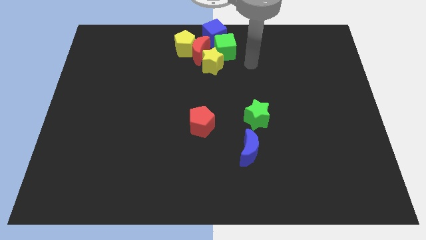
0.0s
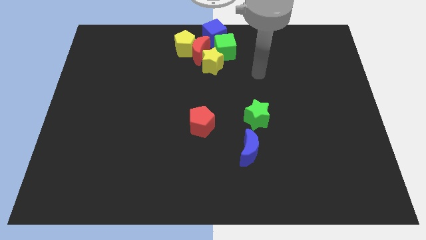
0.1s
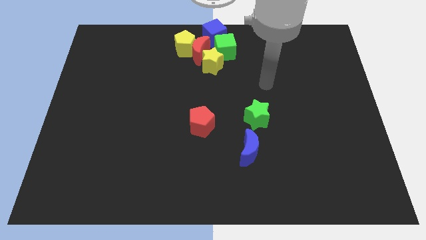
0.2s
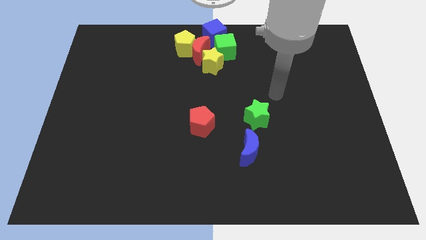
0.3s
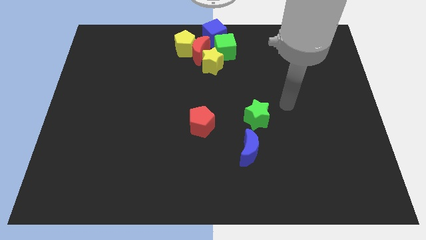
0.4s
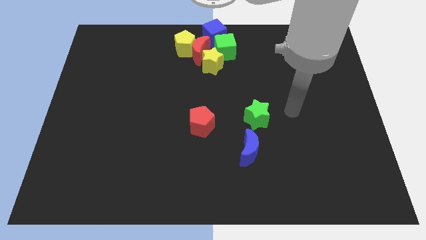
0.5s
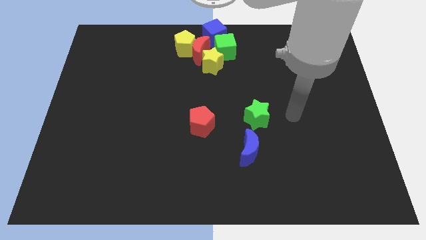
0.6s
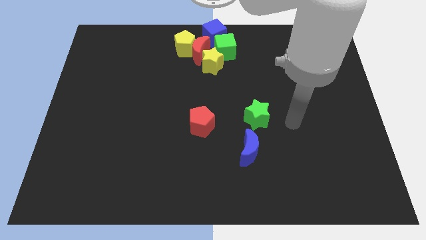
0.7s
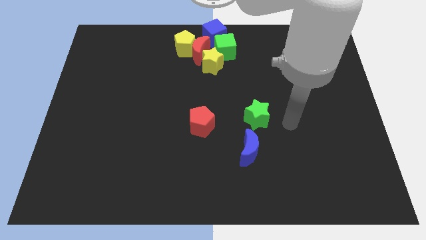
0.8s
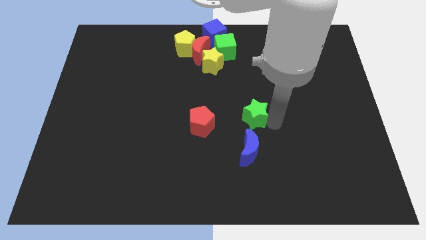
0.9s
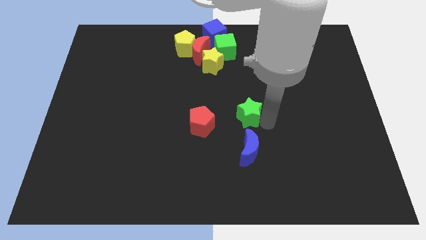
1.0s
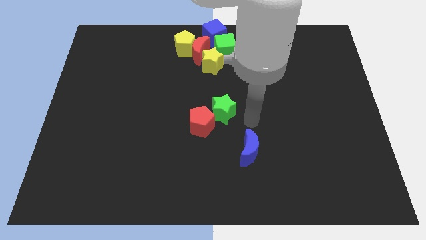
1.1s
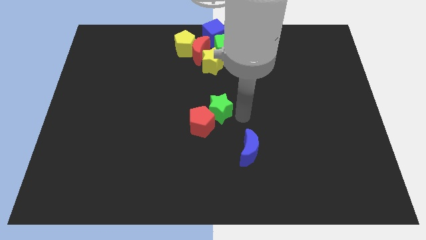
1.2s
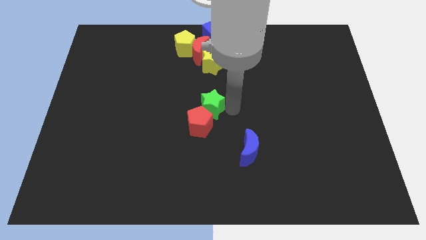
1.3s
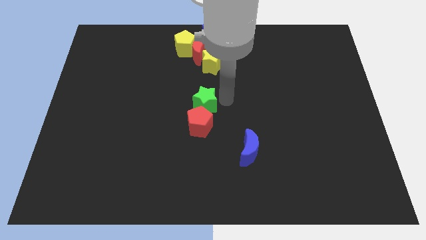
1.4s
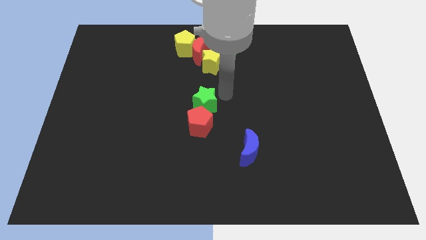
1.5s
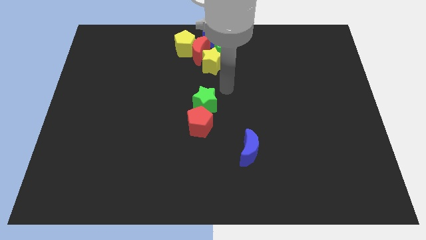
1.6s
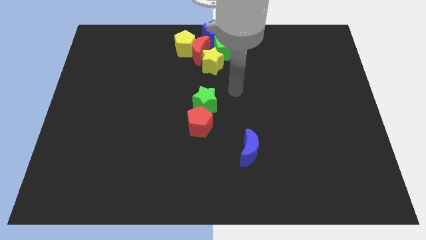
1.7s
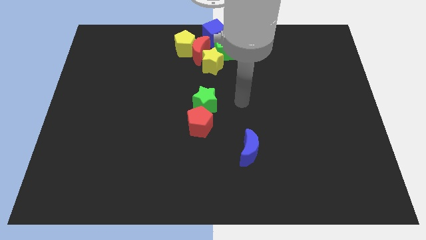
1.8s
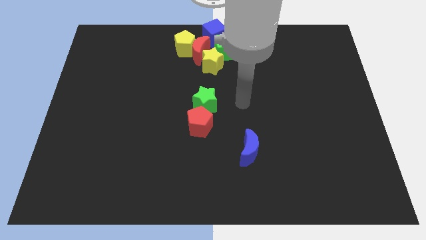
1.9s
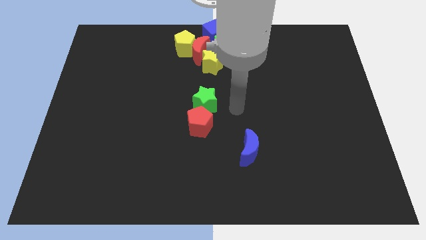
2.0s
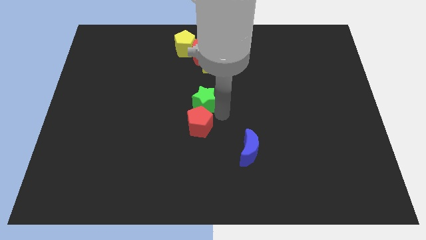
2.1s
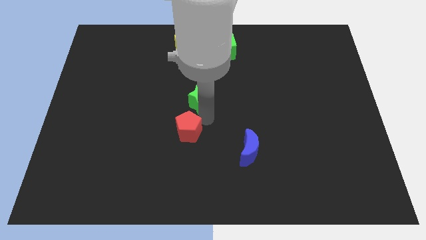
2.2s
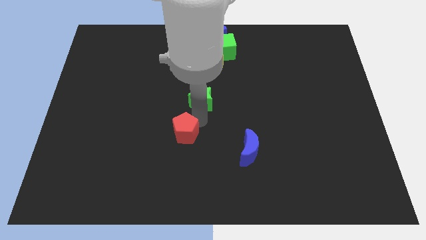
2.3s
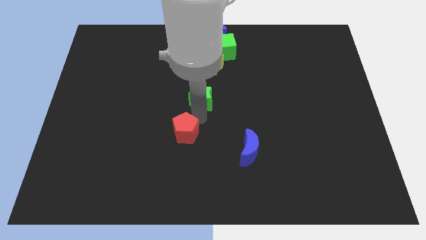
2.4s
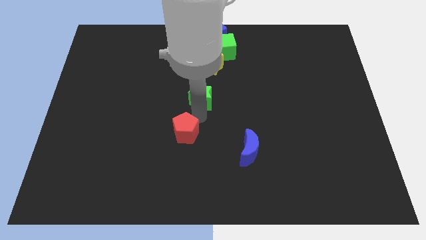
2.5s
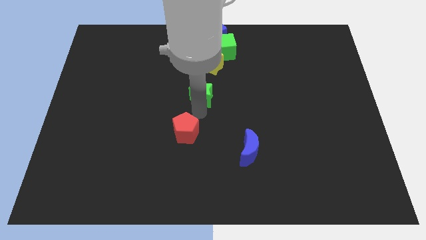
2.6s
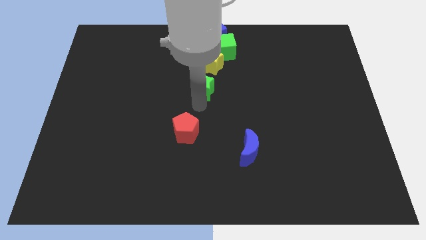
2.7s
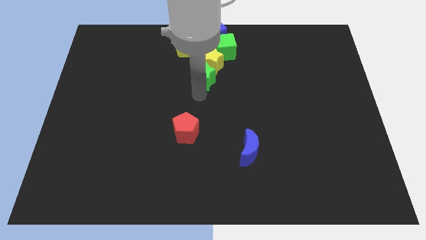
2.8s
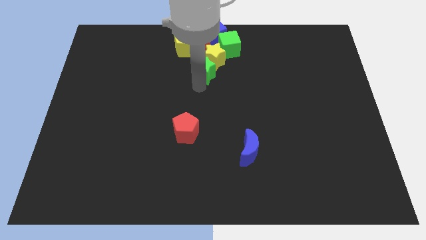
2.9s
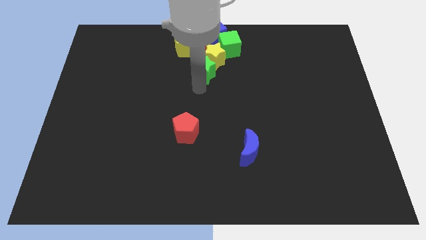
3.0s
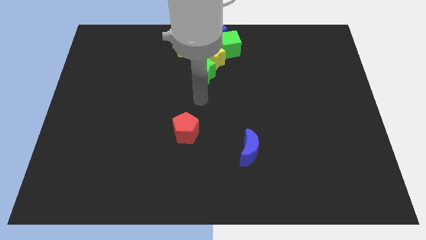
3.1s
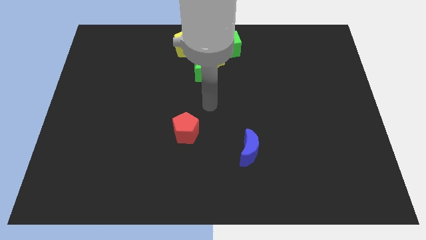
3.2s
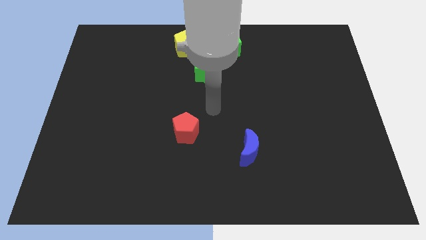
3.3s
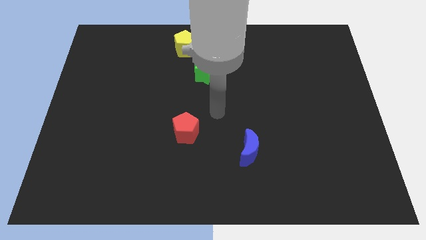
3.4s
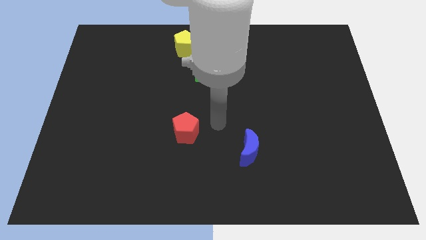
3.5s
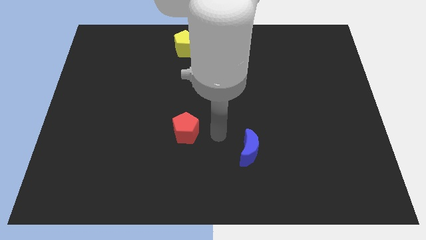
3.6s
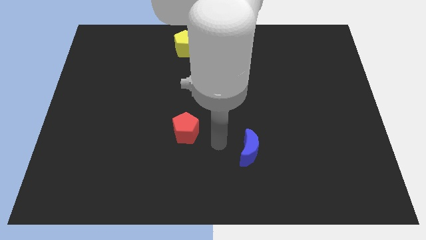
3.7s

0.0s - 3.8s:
place the green star on top of the red pentagon

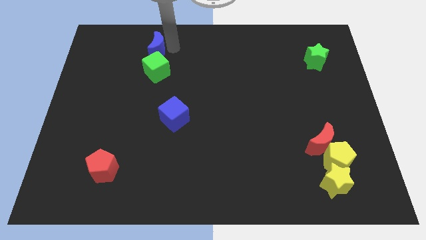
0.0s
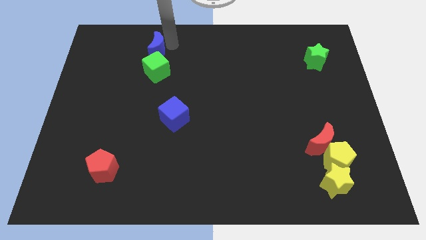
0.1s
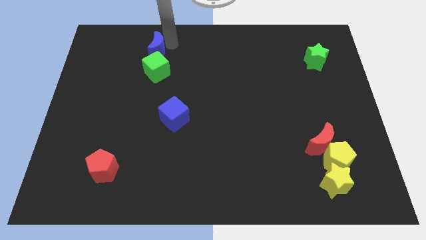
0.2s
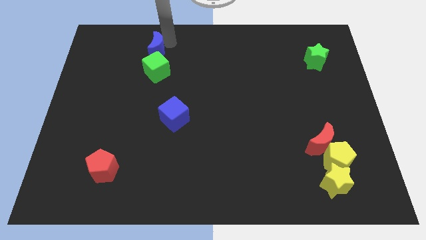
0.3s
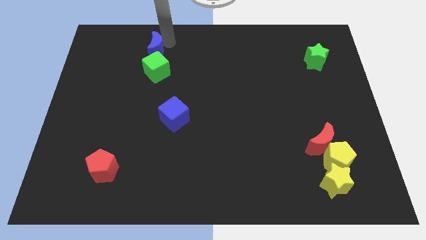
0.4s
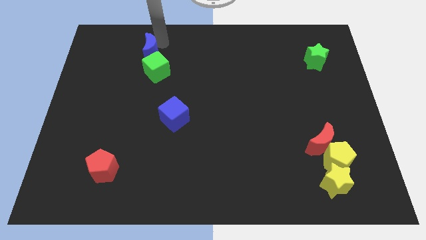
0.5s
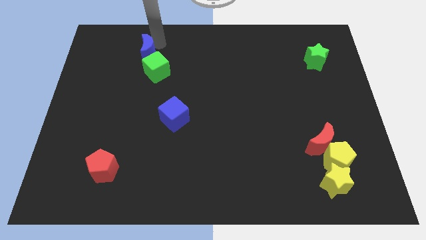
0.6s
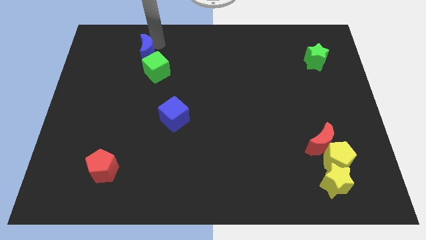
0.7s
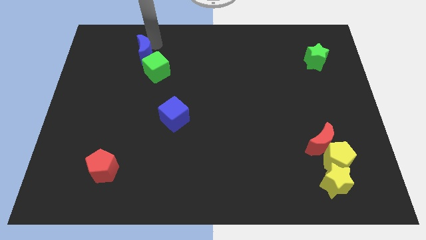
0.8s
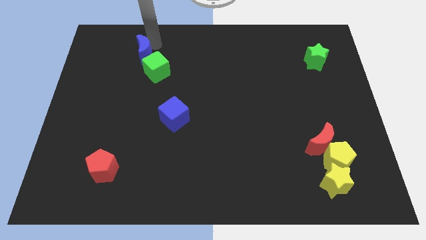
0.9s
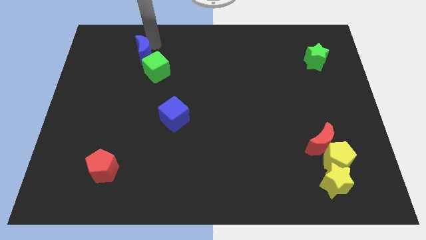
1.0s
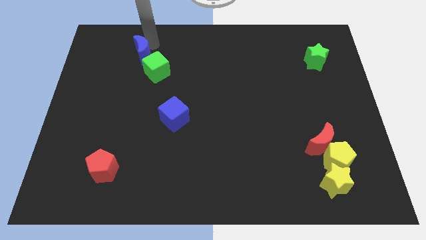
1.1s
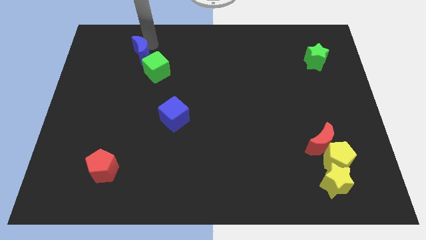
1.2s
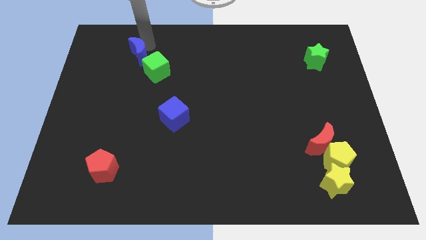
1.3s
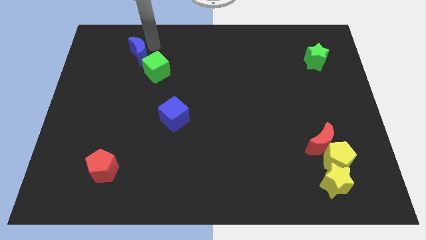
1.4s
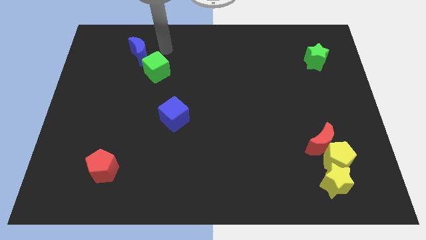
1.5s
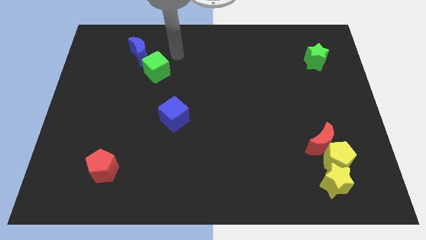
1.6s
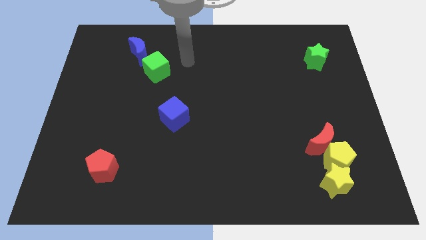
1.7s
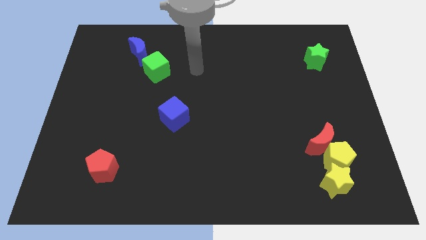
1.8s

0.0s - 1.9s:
move the blue crescent to the top left side of the green cube

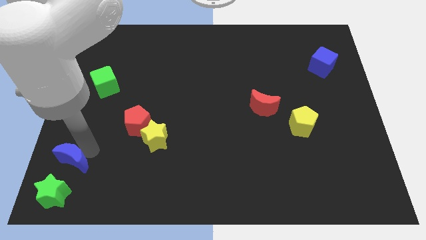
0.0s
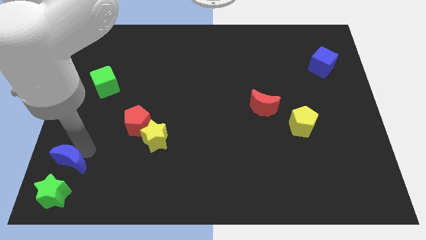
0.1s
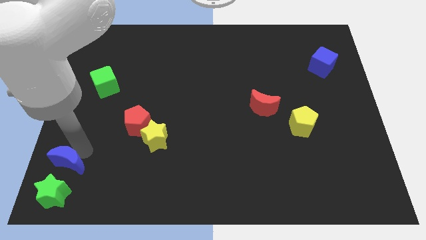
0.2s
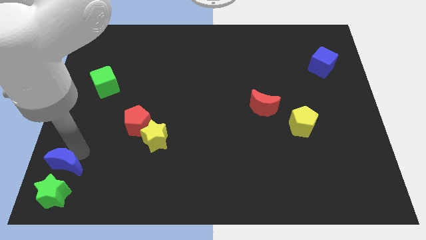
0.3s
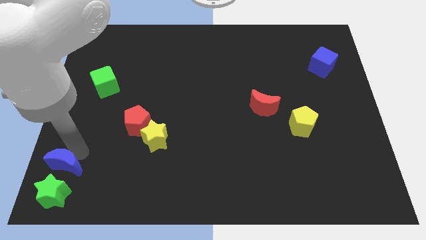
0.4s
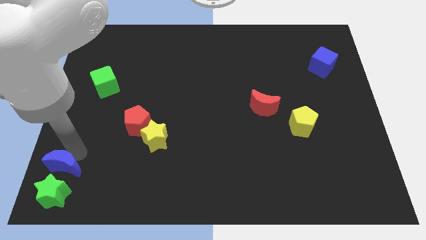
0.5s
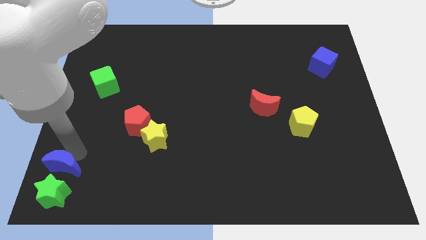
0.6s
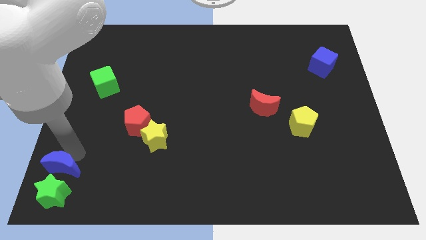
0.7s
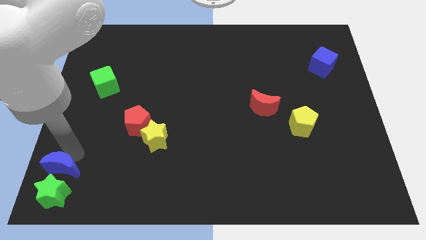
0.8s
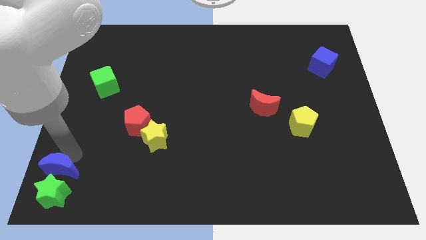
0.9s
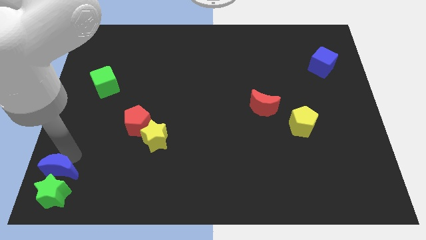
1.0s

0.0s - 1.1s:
push the blue moon towards the green star

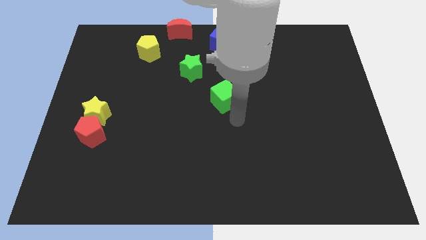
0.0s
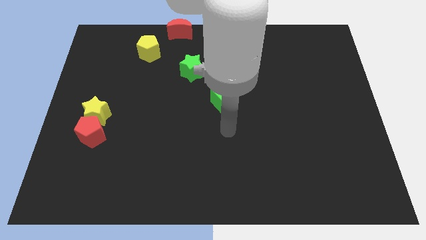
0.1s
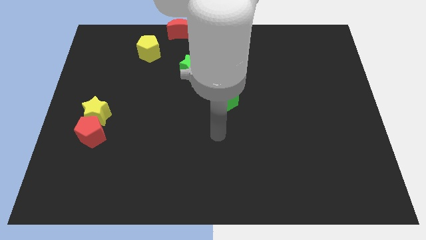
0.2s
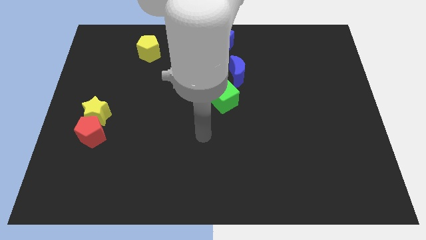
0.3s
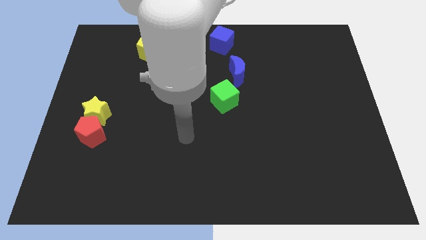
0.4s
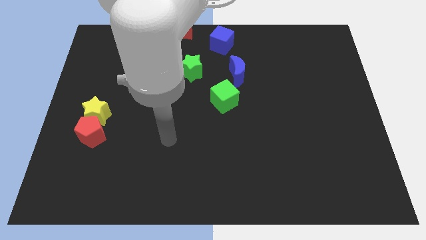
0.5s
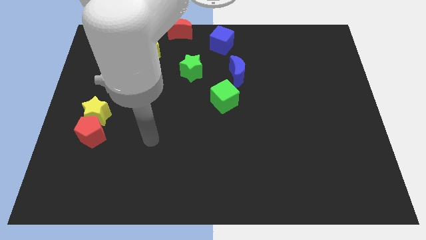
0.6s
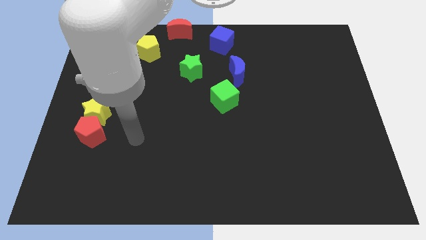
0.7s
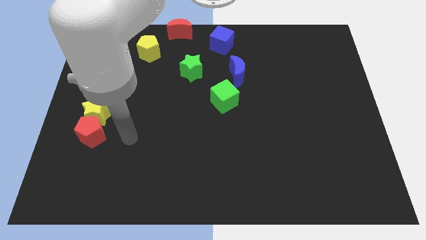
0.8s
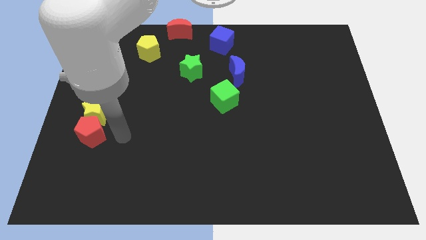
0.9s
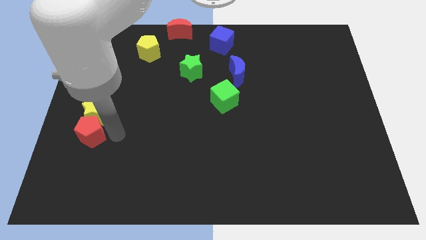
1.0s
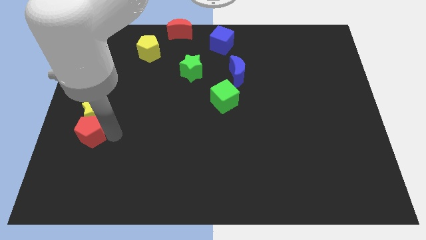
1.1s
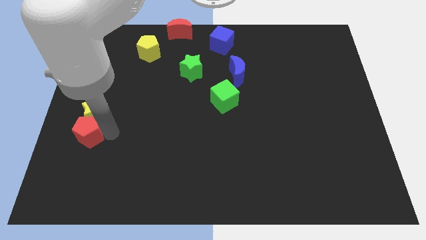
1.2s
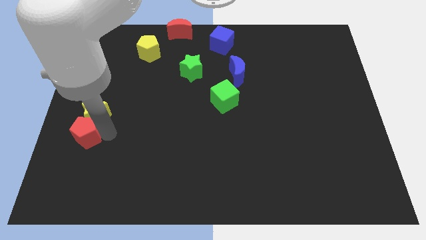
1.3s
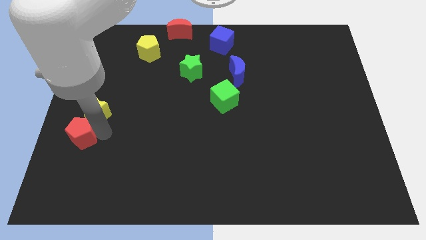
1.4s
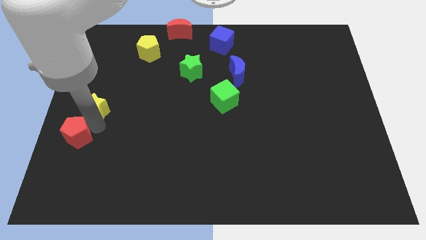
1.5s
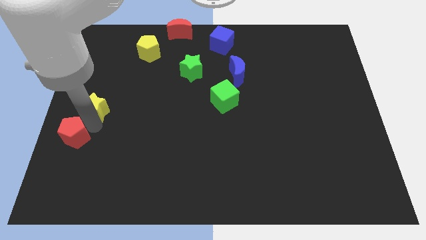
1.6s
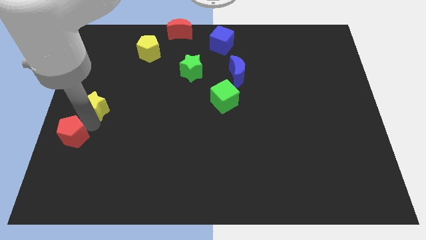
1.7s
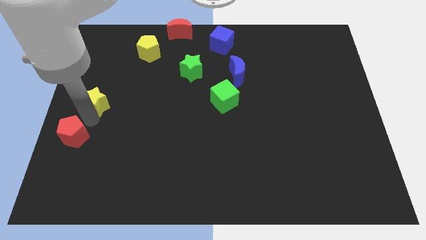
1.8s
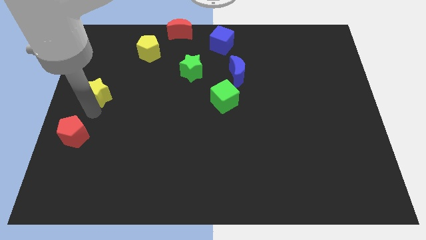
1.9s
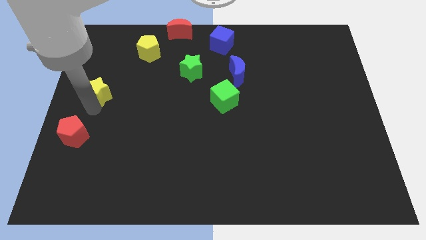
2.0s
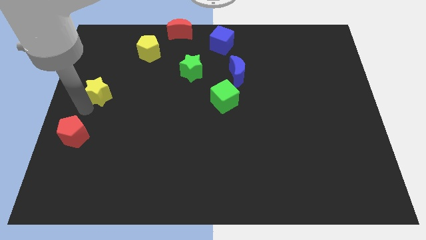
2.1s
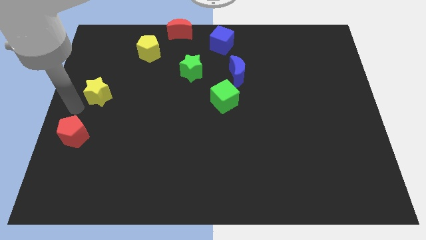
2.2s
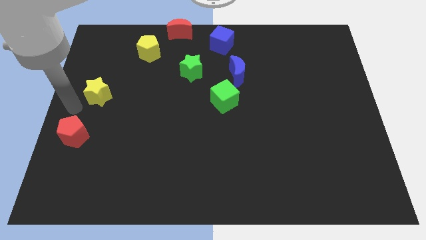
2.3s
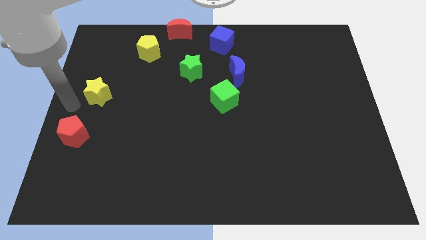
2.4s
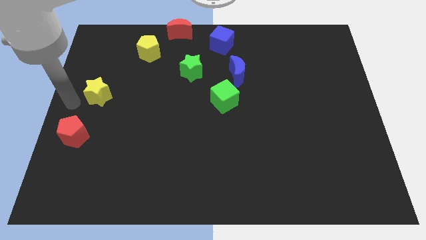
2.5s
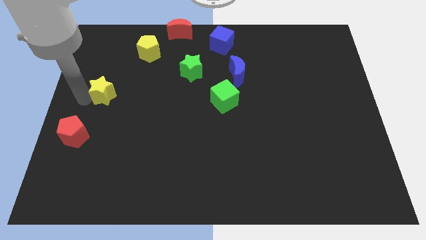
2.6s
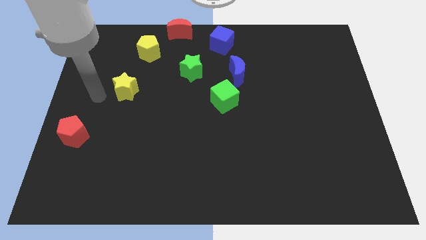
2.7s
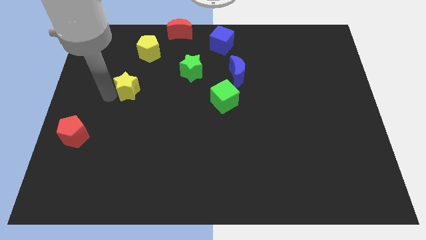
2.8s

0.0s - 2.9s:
separate the yellow star away from the red pentagon
